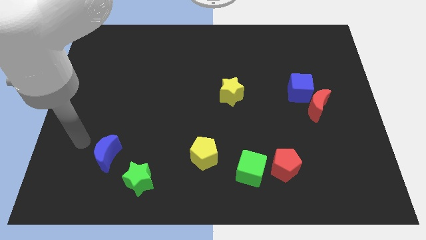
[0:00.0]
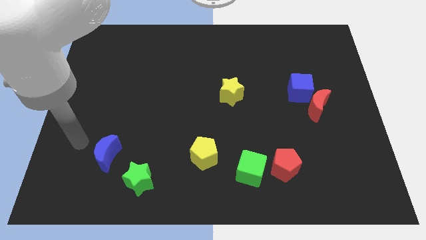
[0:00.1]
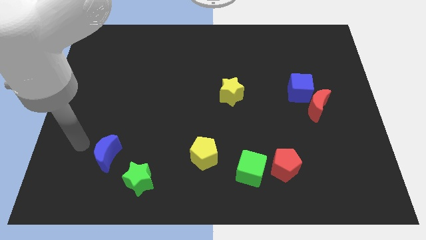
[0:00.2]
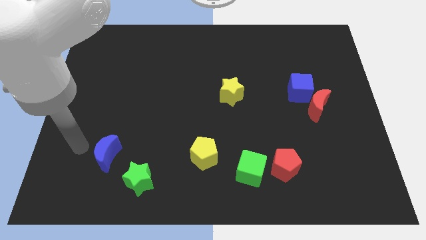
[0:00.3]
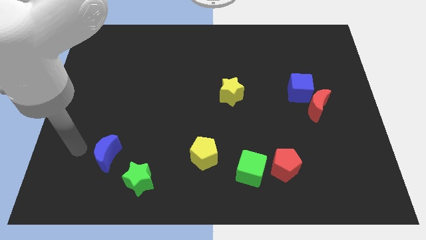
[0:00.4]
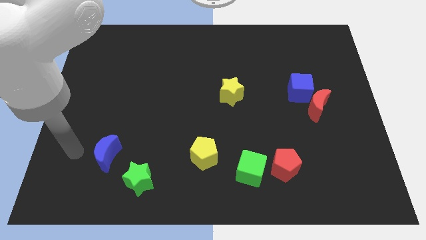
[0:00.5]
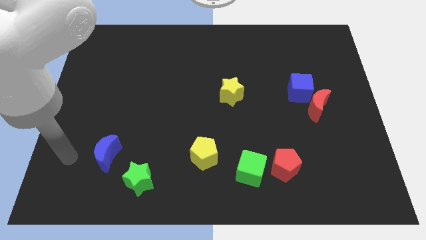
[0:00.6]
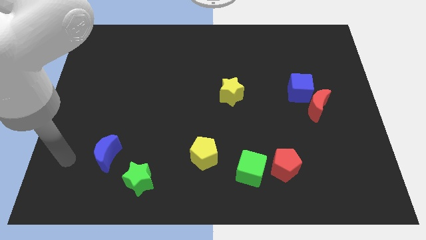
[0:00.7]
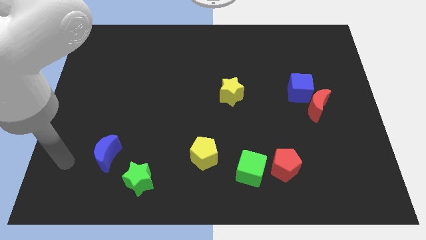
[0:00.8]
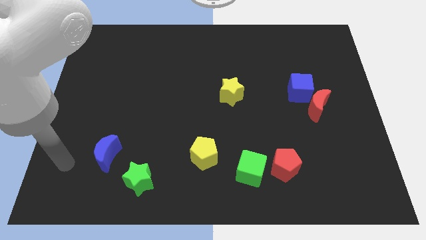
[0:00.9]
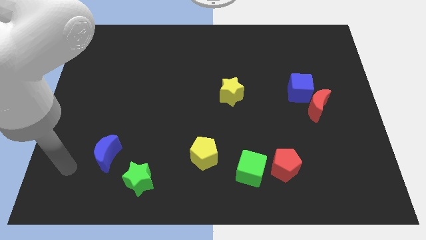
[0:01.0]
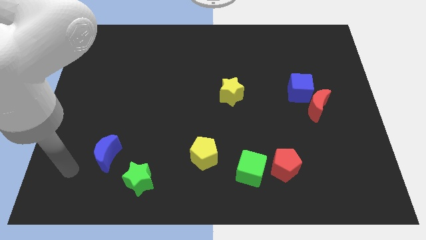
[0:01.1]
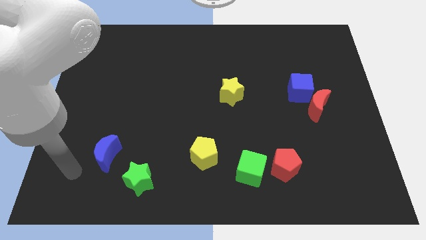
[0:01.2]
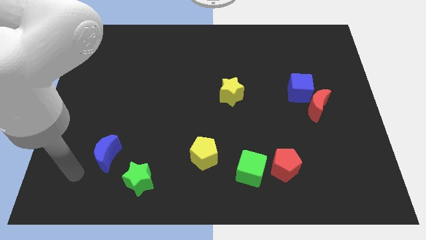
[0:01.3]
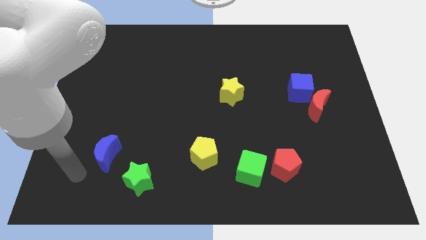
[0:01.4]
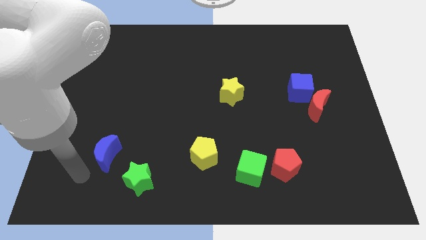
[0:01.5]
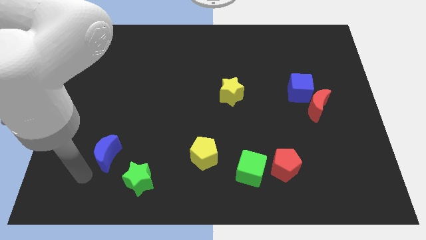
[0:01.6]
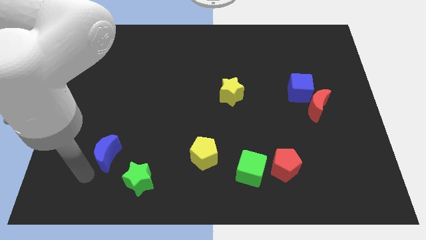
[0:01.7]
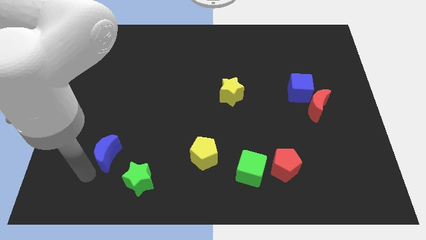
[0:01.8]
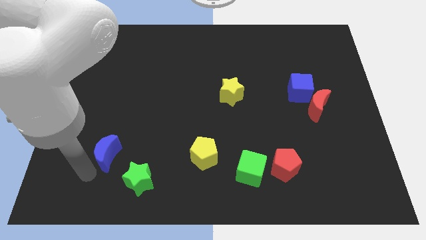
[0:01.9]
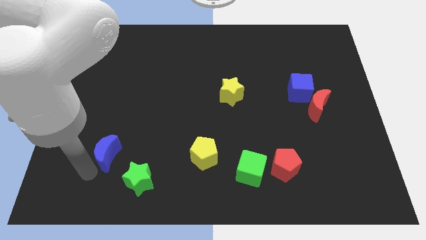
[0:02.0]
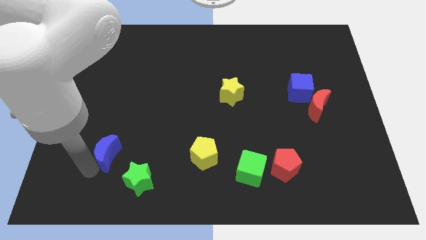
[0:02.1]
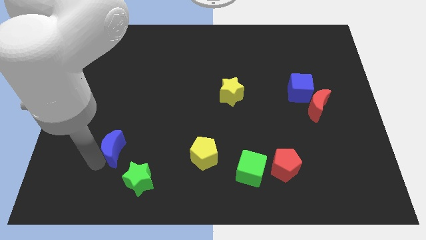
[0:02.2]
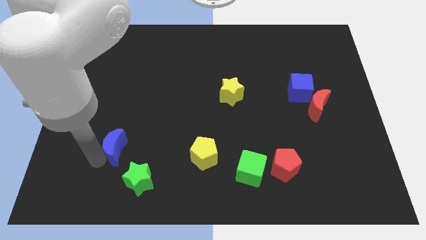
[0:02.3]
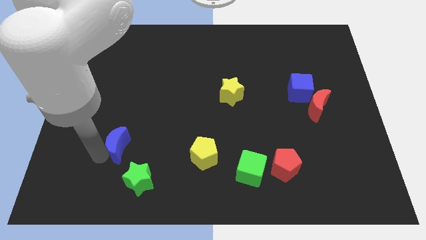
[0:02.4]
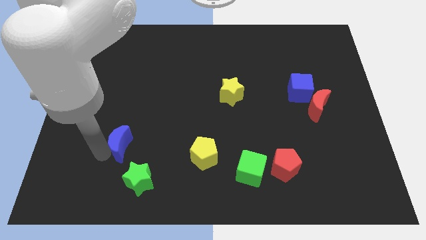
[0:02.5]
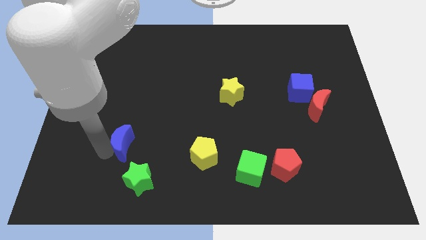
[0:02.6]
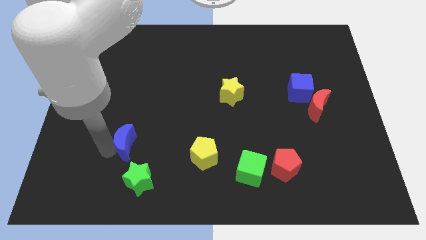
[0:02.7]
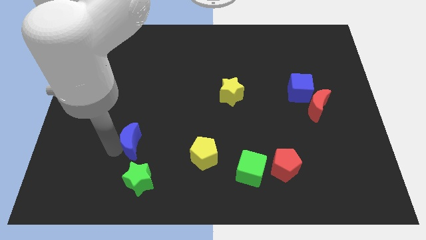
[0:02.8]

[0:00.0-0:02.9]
place the blue moon above the green star

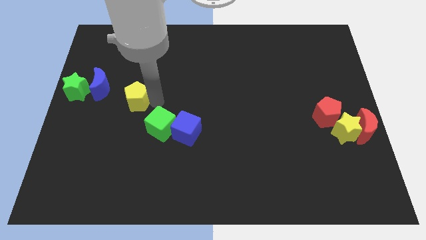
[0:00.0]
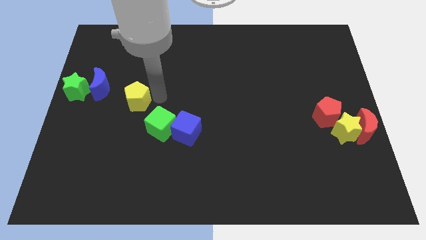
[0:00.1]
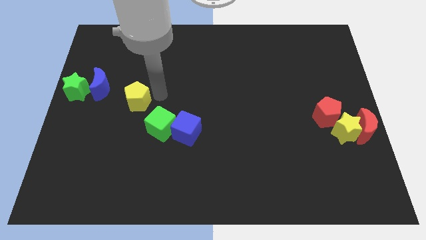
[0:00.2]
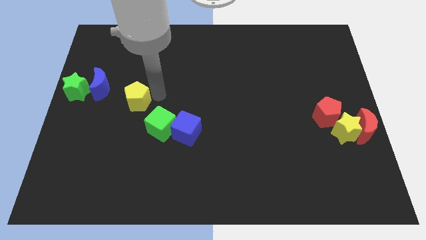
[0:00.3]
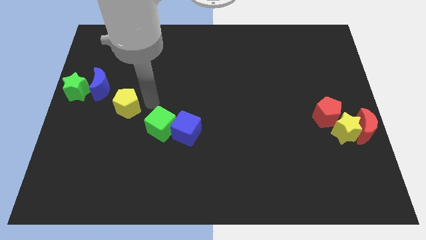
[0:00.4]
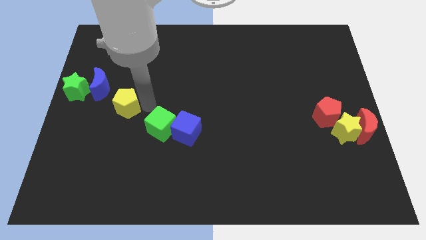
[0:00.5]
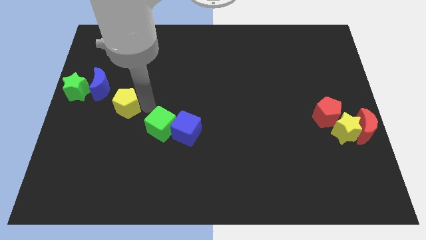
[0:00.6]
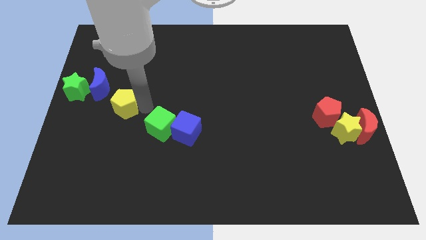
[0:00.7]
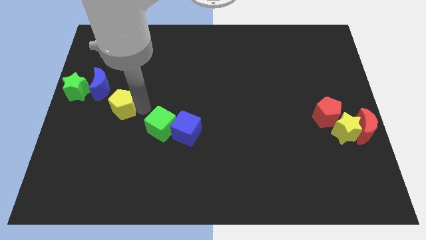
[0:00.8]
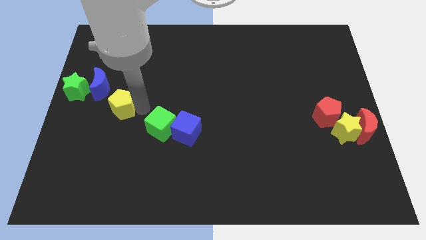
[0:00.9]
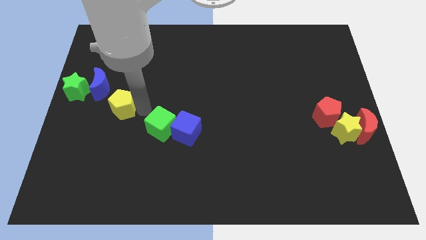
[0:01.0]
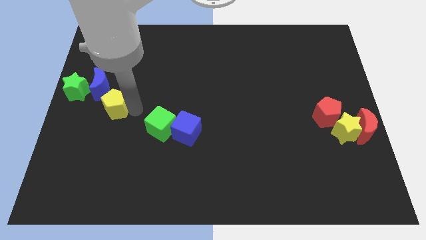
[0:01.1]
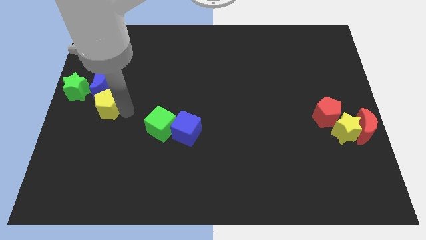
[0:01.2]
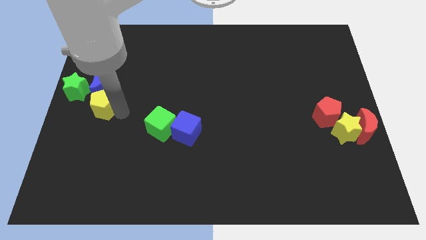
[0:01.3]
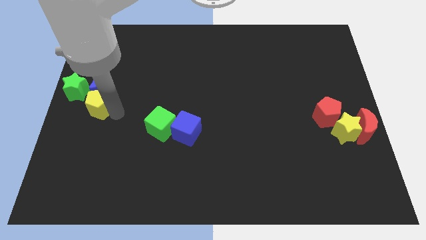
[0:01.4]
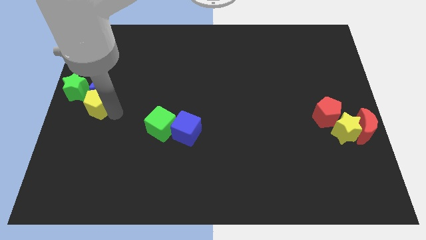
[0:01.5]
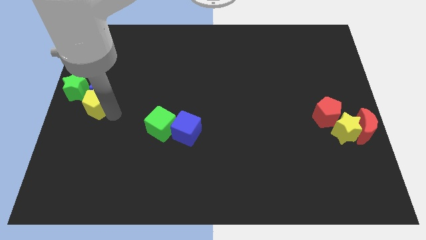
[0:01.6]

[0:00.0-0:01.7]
push yellow pentagon below blue crescent

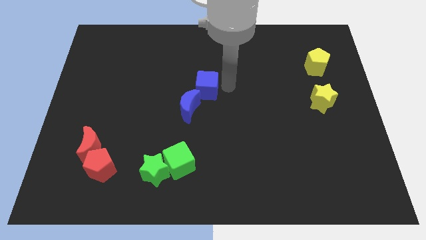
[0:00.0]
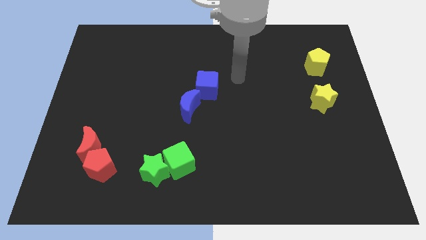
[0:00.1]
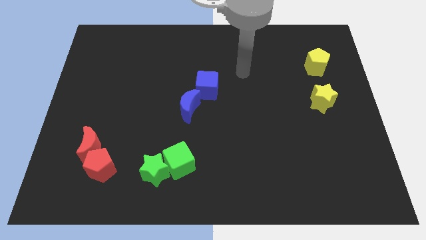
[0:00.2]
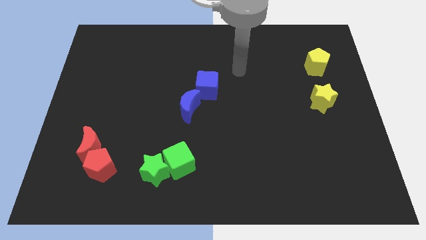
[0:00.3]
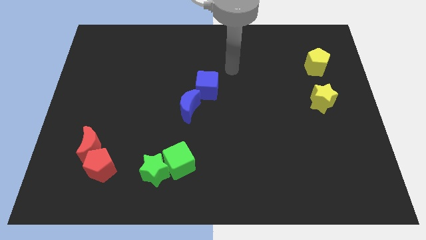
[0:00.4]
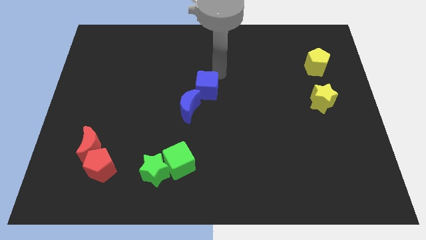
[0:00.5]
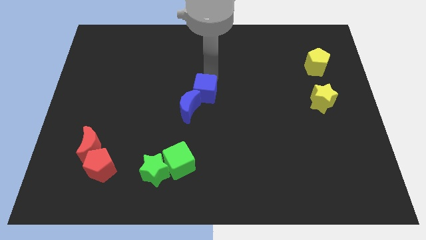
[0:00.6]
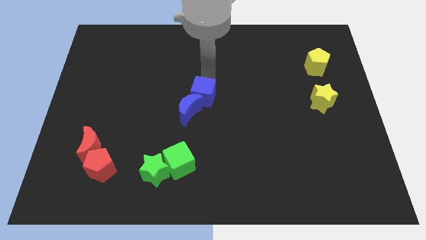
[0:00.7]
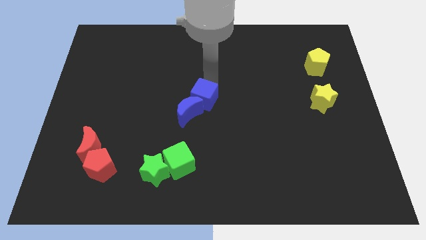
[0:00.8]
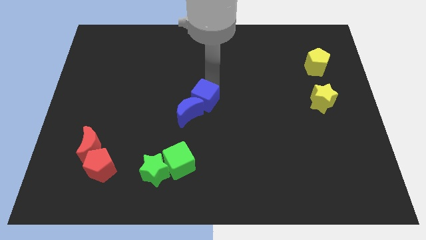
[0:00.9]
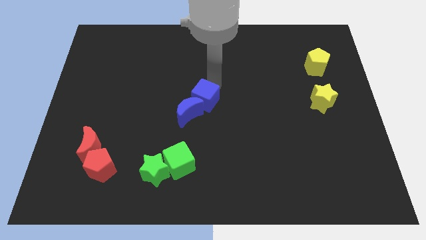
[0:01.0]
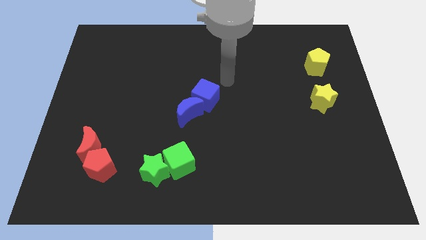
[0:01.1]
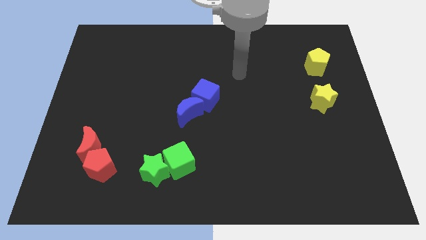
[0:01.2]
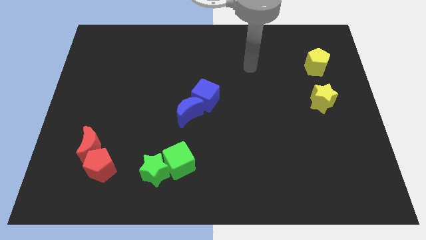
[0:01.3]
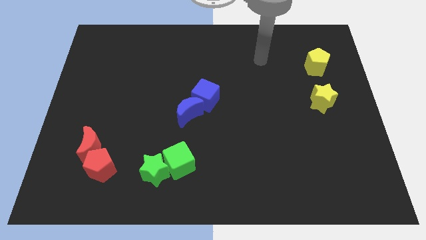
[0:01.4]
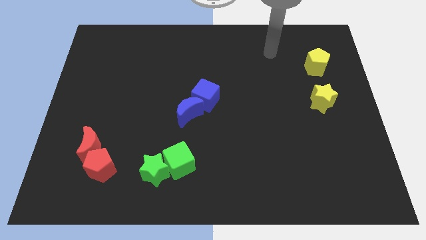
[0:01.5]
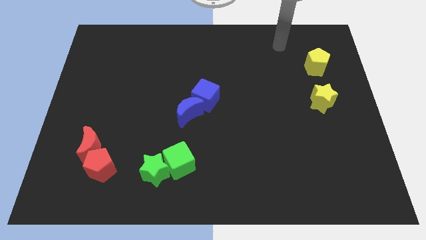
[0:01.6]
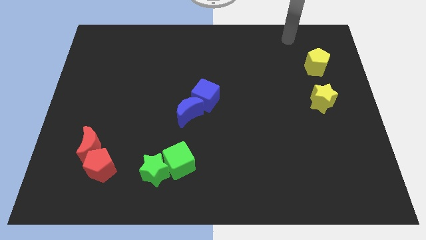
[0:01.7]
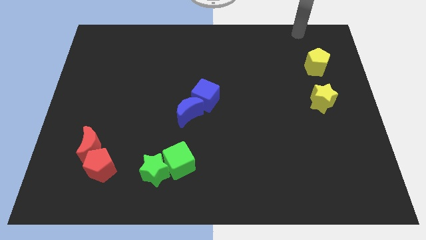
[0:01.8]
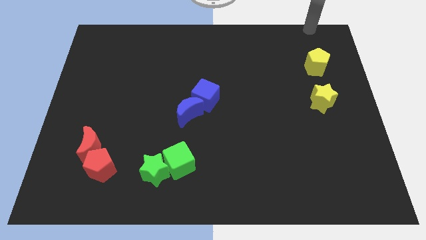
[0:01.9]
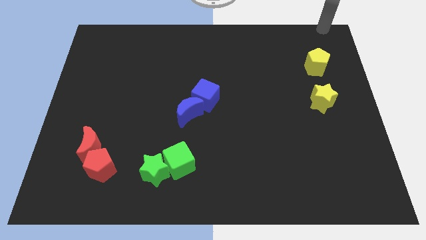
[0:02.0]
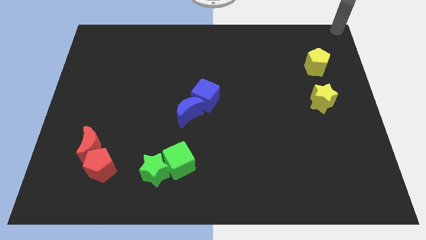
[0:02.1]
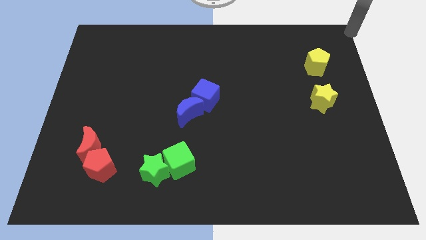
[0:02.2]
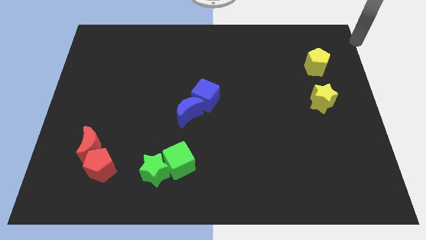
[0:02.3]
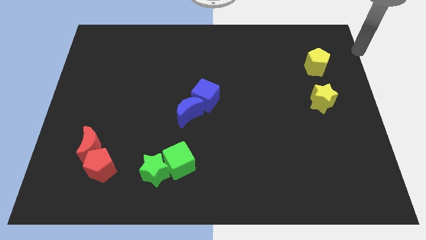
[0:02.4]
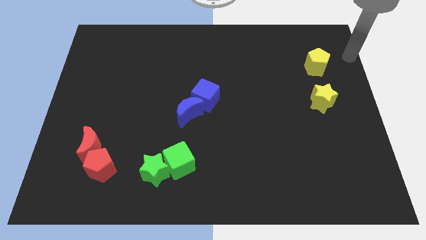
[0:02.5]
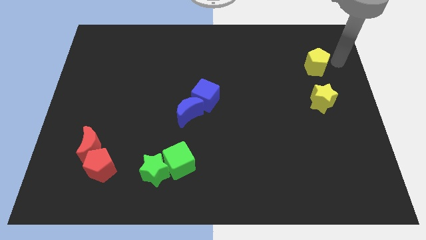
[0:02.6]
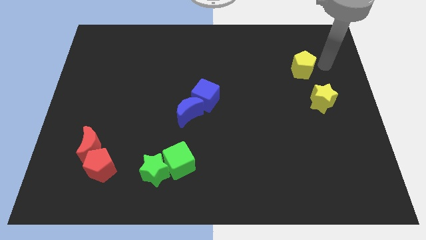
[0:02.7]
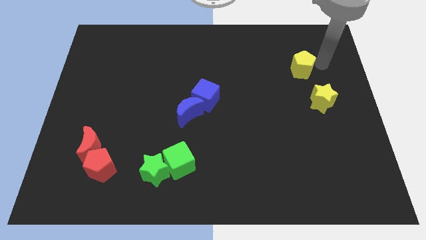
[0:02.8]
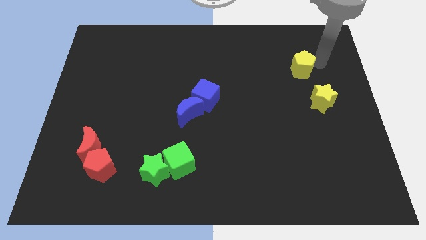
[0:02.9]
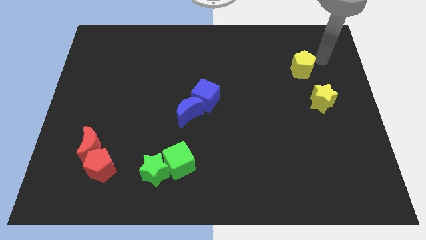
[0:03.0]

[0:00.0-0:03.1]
slightly move the yellow pentagon towards the left

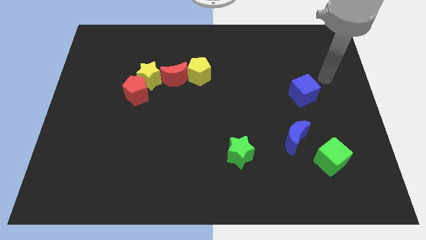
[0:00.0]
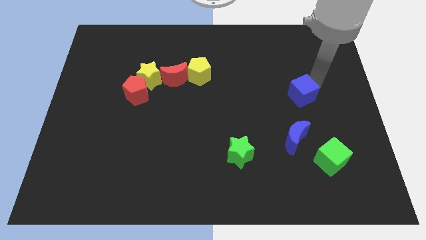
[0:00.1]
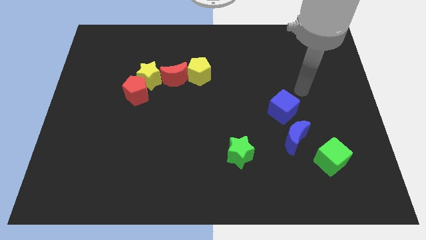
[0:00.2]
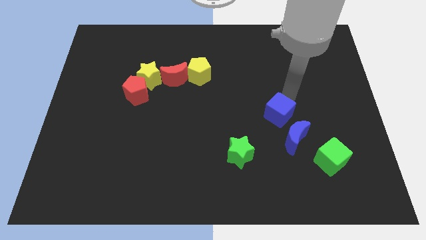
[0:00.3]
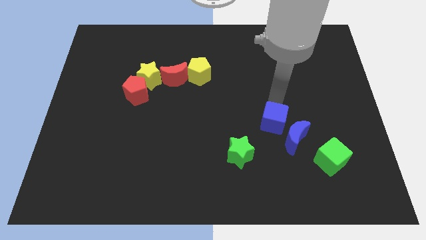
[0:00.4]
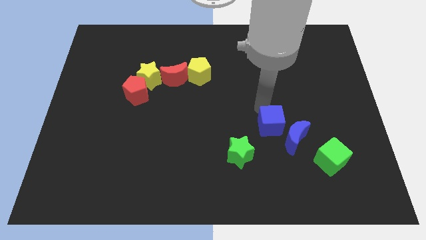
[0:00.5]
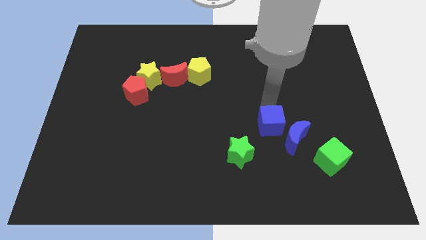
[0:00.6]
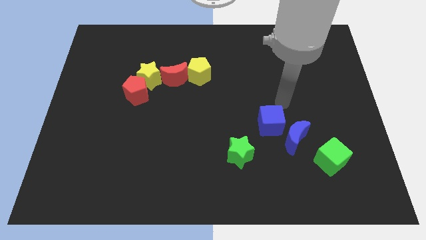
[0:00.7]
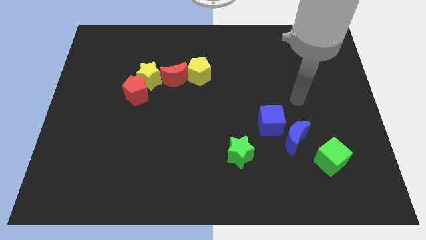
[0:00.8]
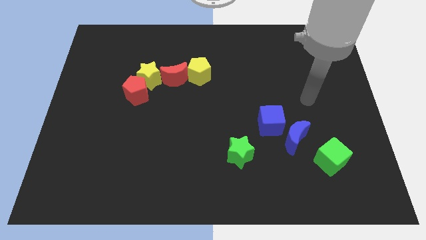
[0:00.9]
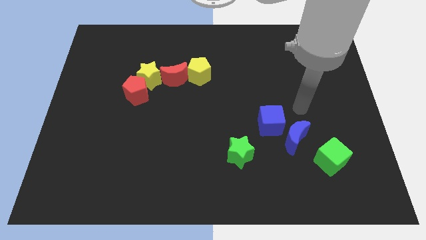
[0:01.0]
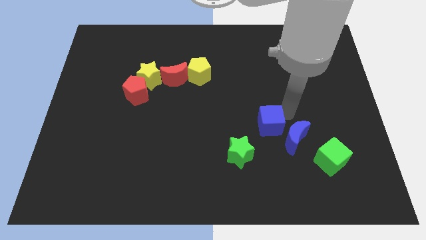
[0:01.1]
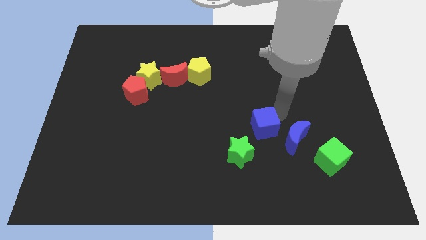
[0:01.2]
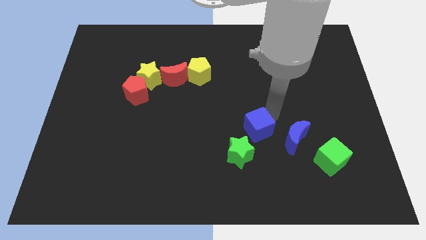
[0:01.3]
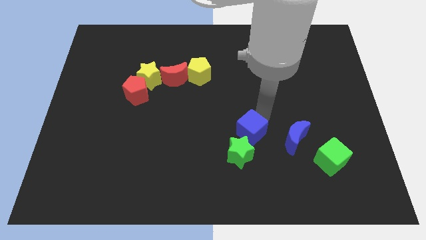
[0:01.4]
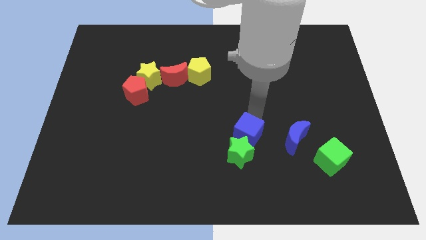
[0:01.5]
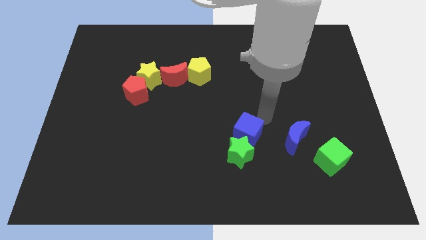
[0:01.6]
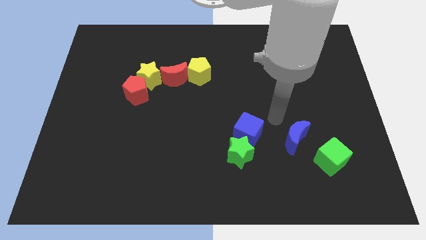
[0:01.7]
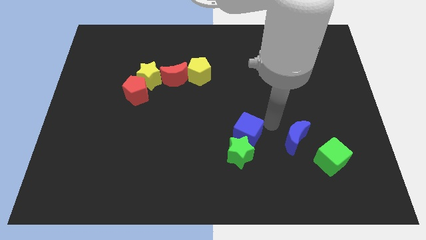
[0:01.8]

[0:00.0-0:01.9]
push the blue cube into green star
